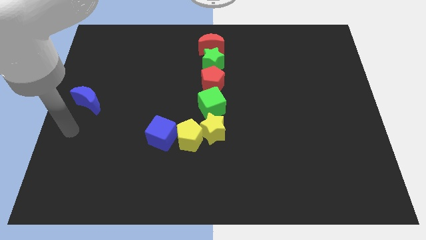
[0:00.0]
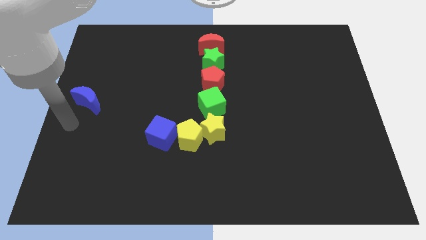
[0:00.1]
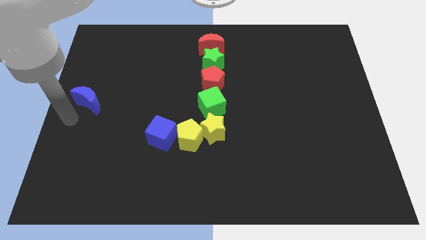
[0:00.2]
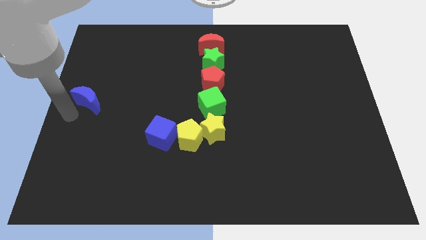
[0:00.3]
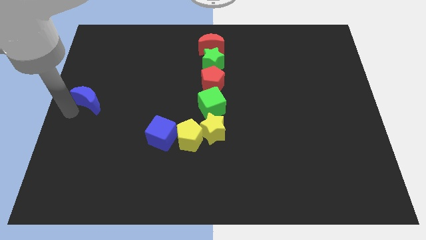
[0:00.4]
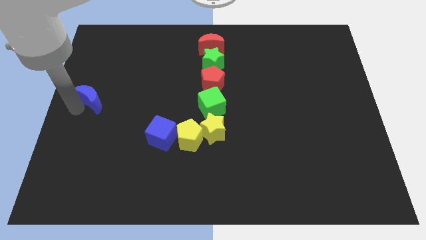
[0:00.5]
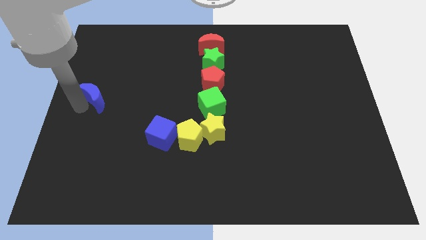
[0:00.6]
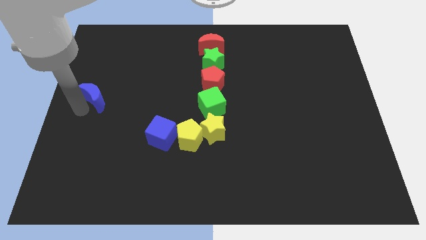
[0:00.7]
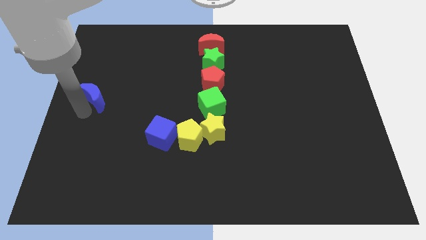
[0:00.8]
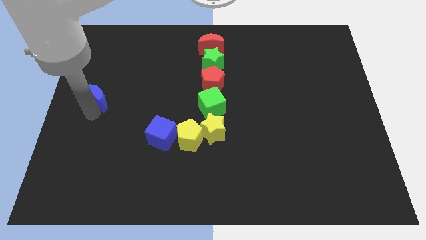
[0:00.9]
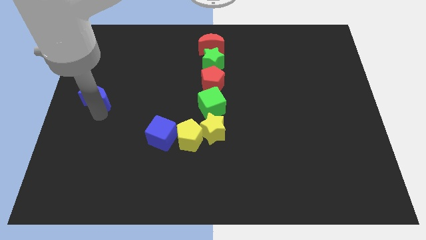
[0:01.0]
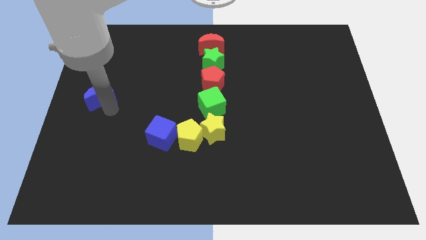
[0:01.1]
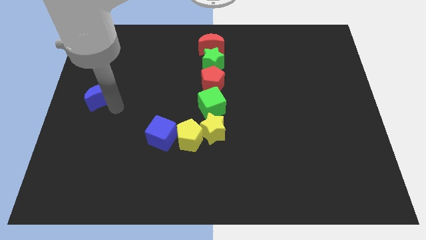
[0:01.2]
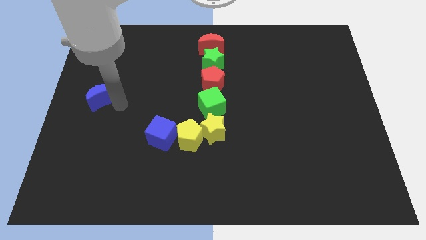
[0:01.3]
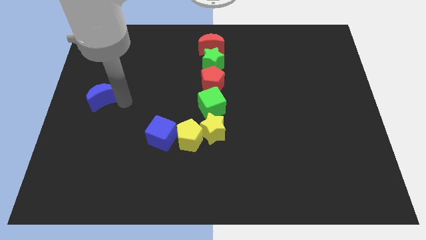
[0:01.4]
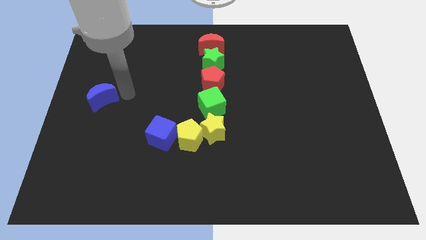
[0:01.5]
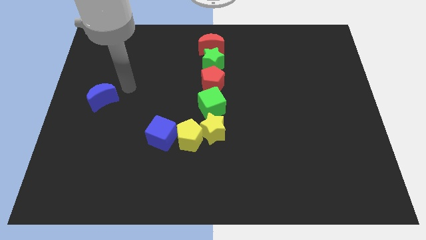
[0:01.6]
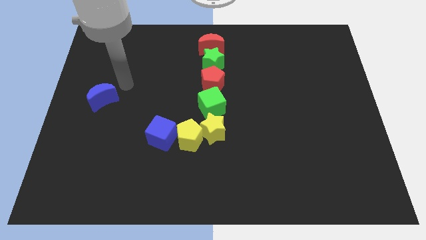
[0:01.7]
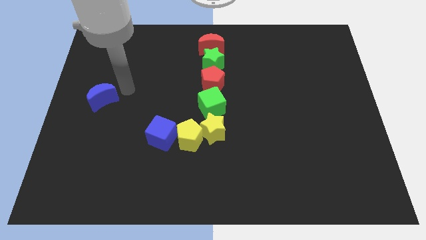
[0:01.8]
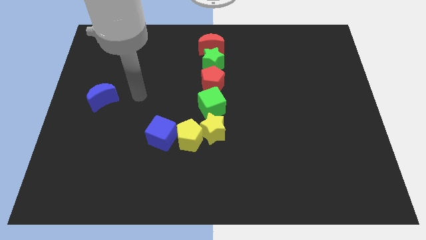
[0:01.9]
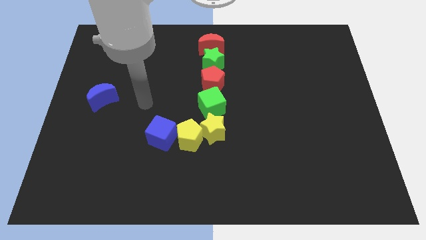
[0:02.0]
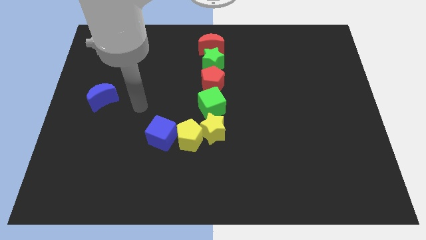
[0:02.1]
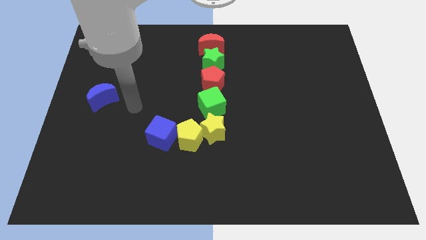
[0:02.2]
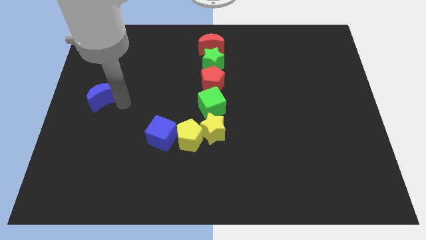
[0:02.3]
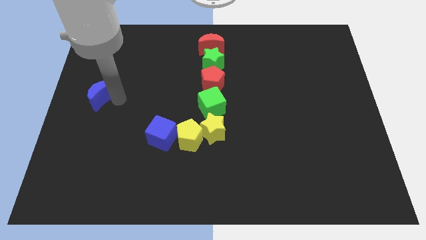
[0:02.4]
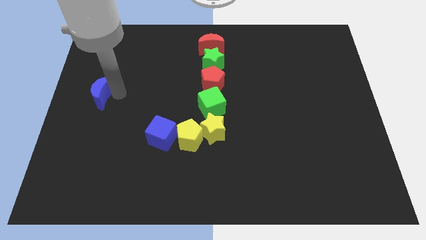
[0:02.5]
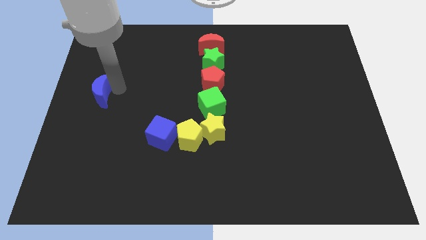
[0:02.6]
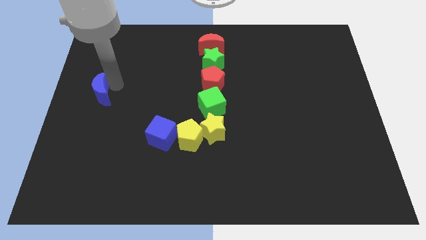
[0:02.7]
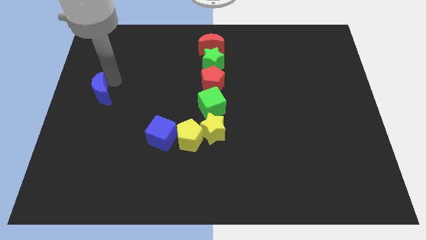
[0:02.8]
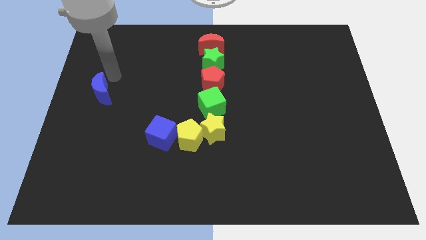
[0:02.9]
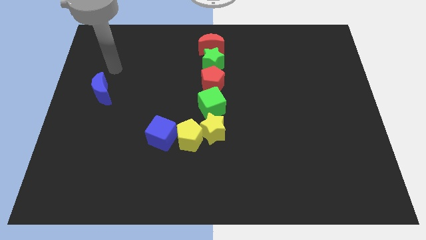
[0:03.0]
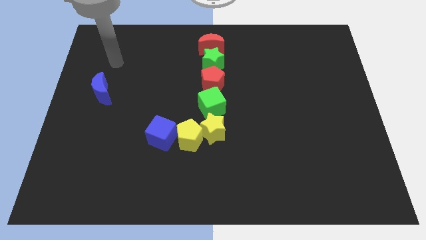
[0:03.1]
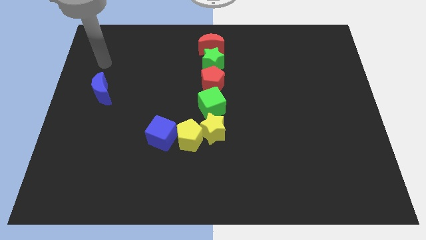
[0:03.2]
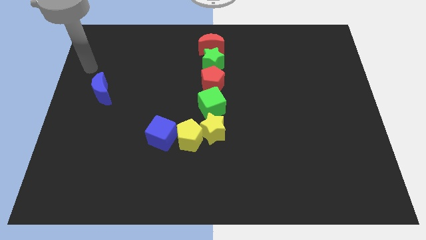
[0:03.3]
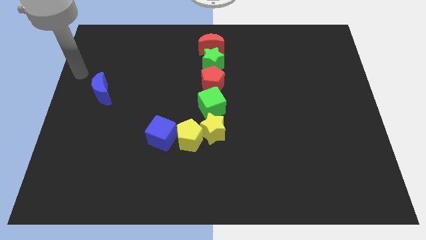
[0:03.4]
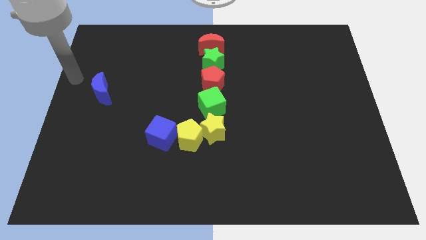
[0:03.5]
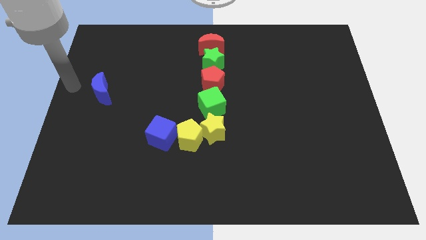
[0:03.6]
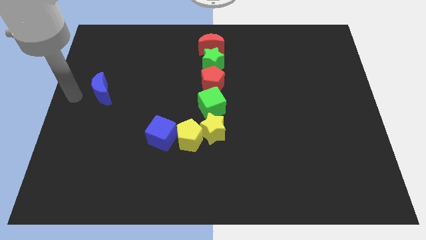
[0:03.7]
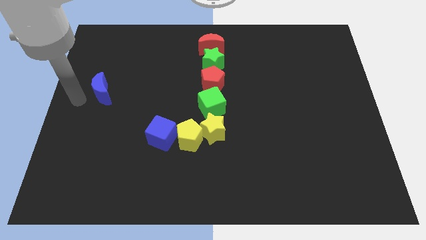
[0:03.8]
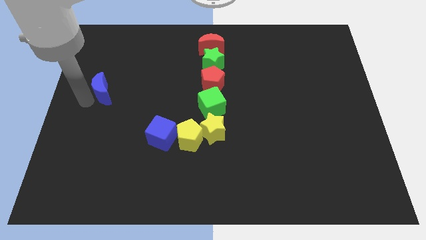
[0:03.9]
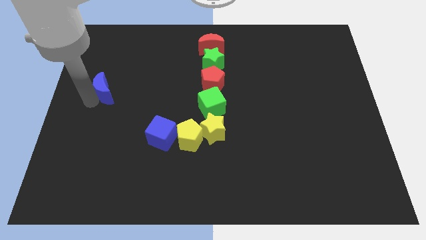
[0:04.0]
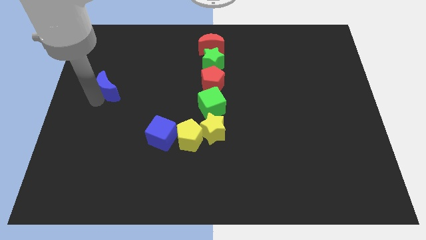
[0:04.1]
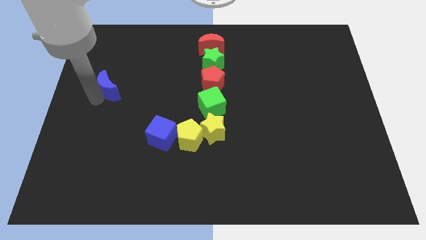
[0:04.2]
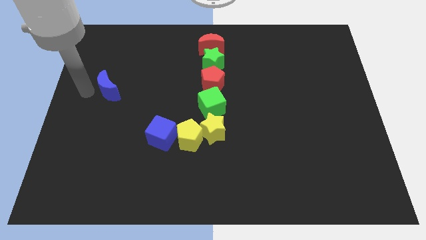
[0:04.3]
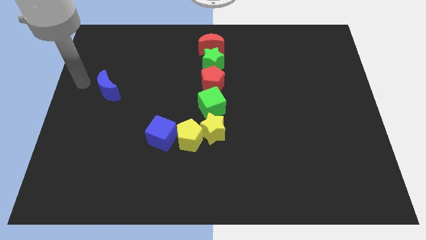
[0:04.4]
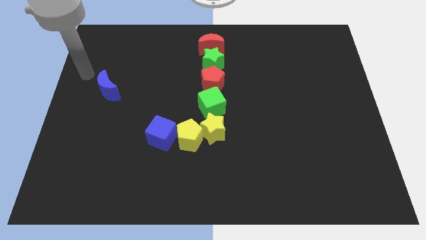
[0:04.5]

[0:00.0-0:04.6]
push the blue moon upwards slightly

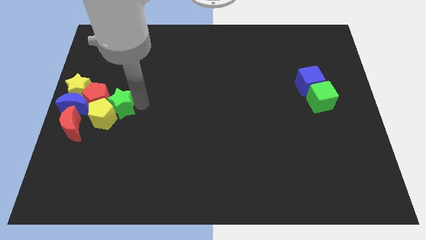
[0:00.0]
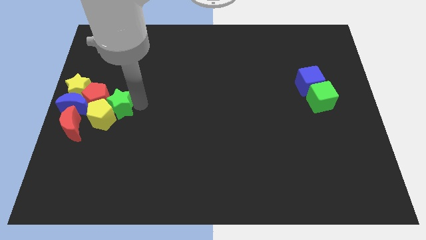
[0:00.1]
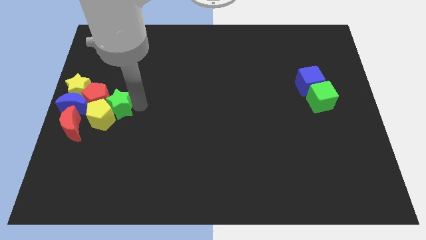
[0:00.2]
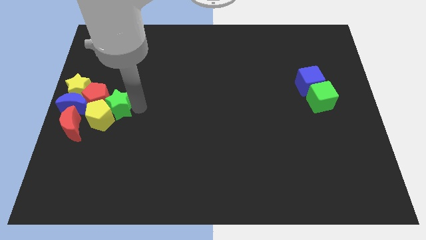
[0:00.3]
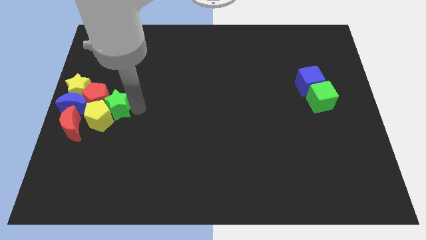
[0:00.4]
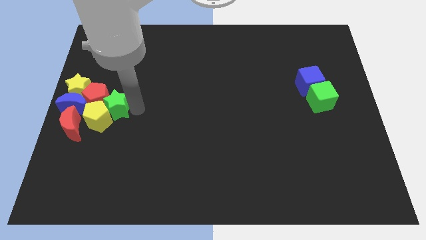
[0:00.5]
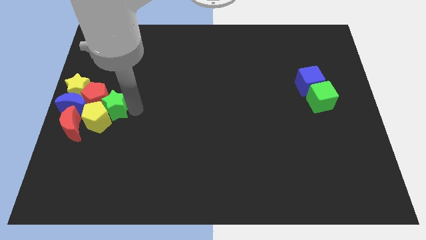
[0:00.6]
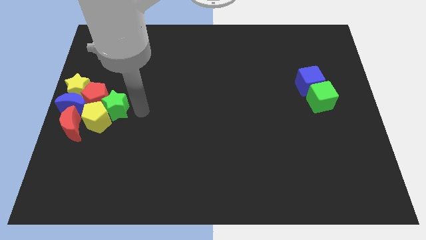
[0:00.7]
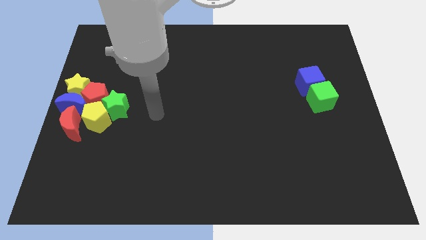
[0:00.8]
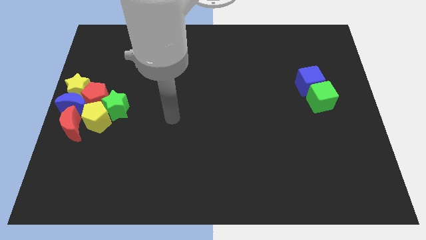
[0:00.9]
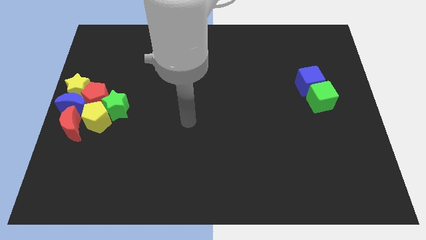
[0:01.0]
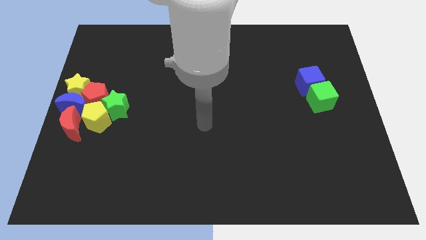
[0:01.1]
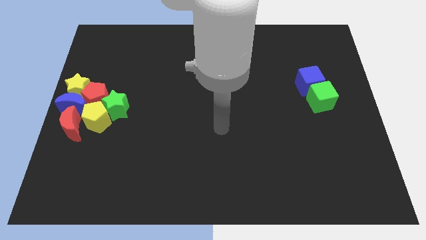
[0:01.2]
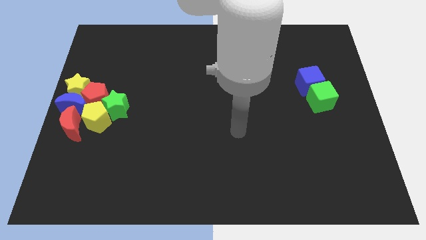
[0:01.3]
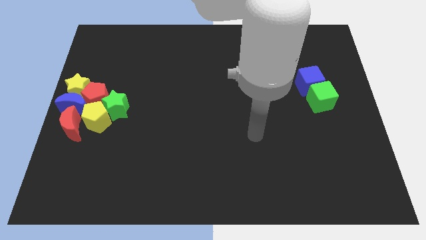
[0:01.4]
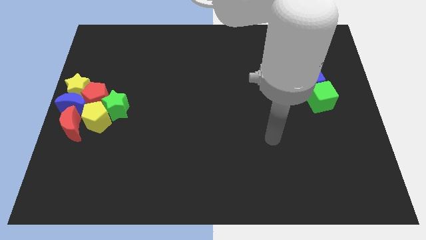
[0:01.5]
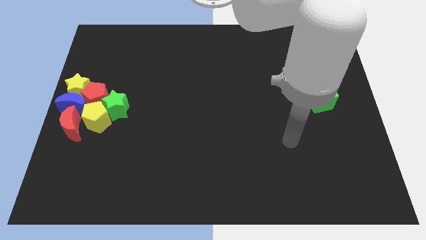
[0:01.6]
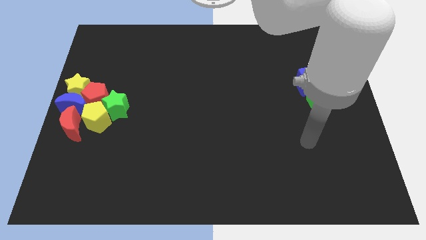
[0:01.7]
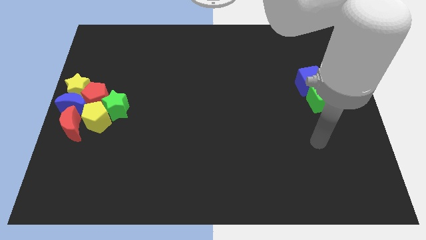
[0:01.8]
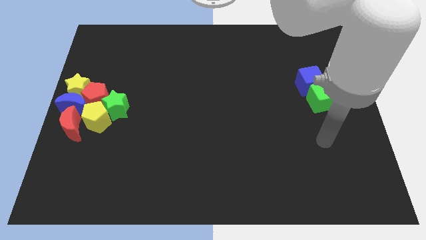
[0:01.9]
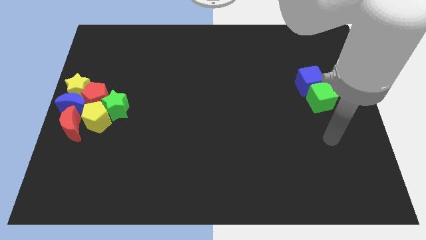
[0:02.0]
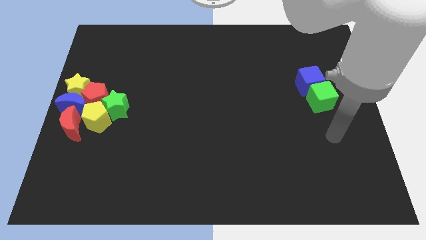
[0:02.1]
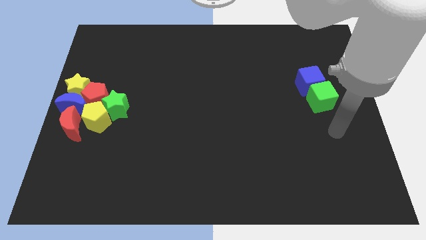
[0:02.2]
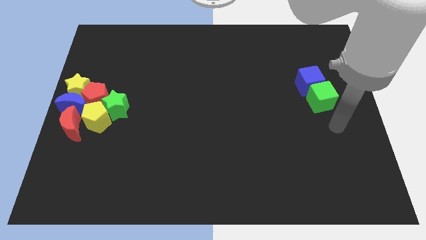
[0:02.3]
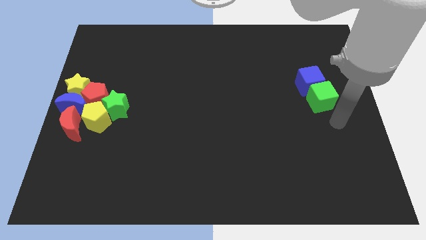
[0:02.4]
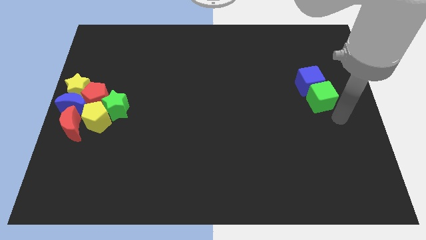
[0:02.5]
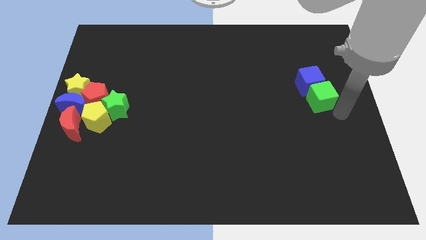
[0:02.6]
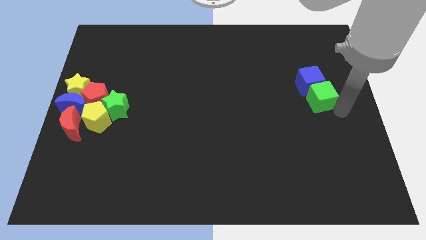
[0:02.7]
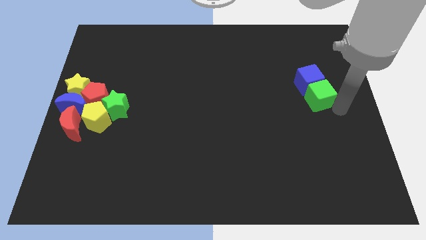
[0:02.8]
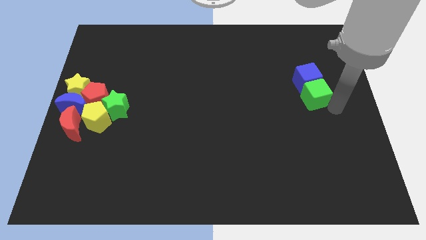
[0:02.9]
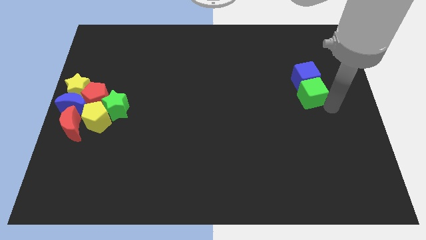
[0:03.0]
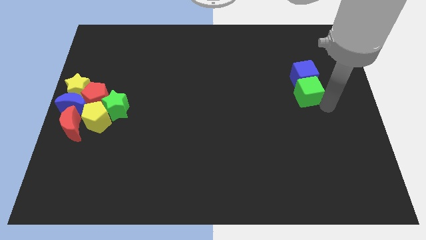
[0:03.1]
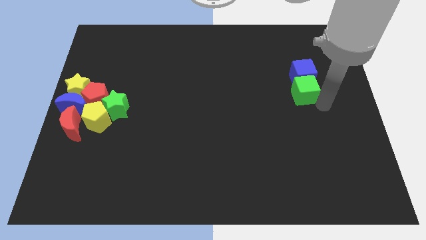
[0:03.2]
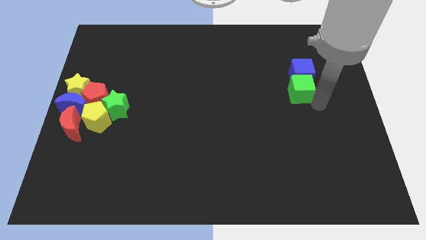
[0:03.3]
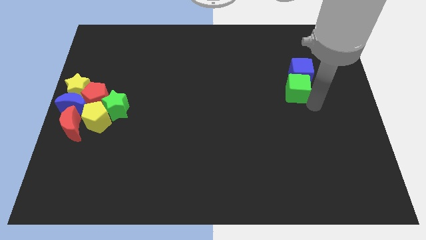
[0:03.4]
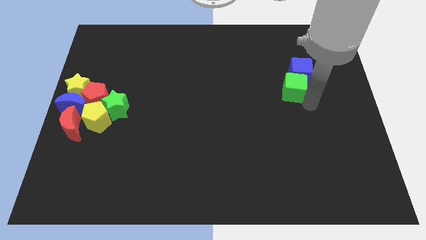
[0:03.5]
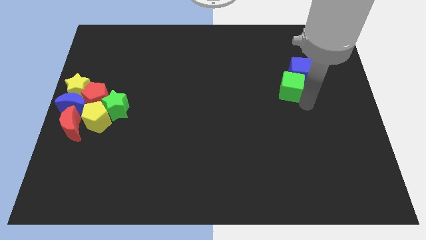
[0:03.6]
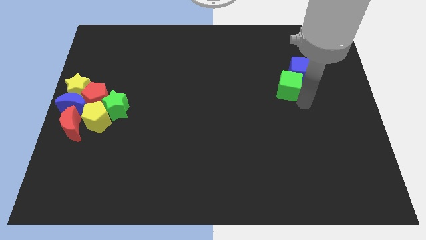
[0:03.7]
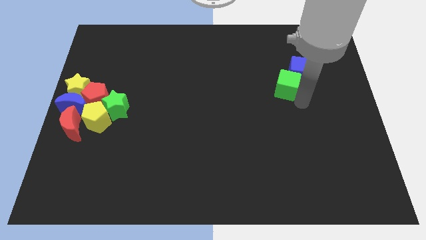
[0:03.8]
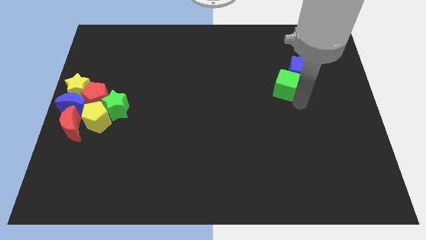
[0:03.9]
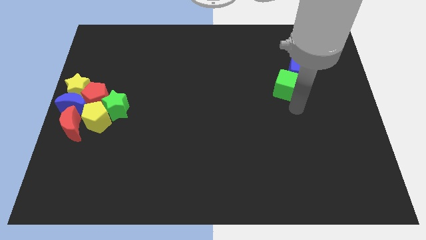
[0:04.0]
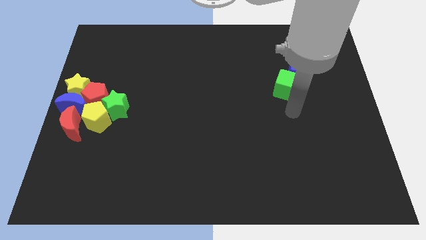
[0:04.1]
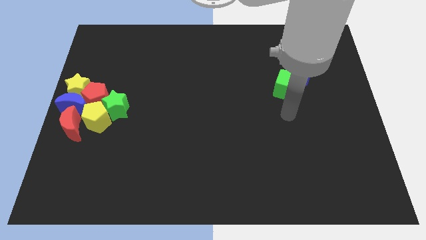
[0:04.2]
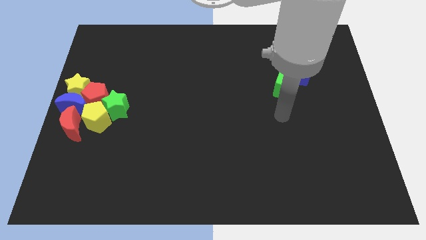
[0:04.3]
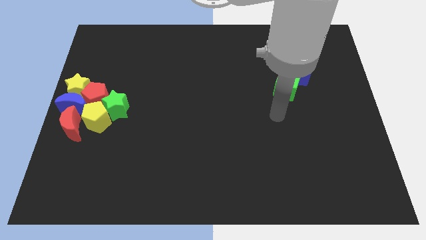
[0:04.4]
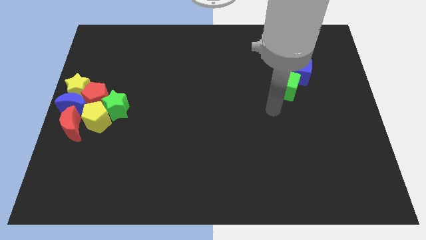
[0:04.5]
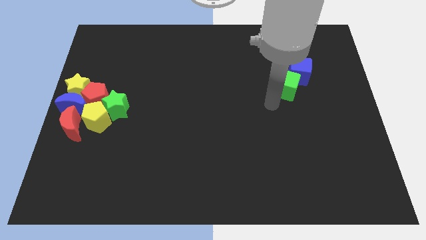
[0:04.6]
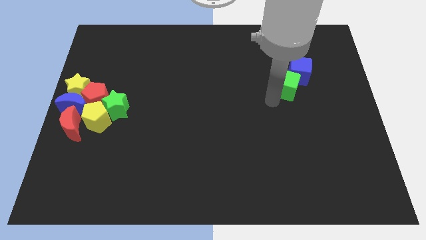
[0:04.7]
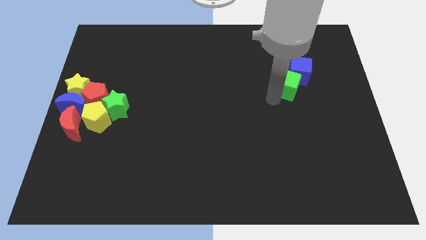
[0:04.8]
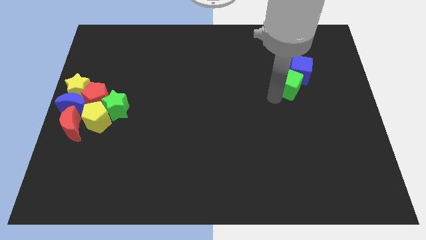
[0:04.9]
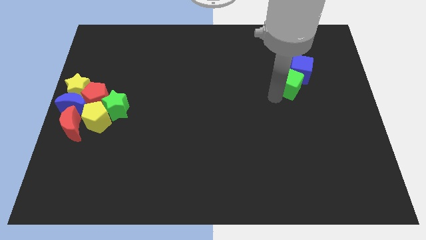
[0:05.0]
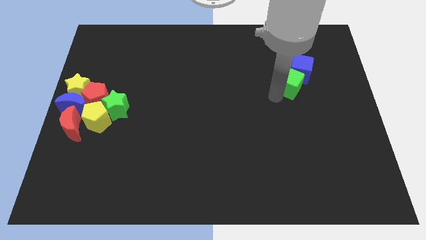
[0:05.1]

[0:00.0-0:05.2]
push the green cube and blue cube towards the top side of the board
